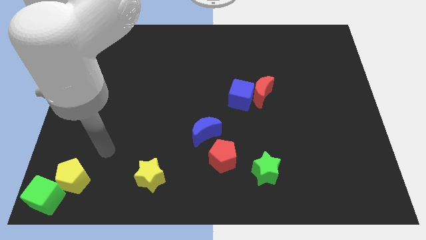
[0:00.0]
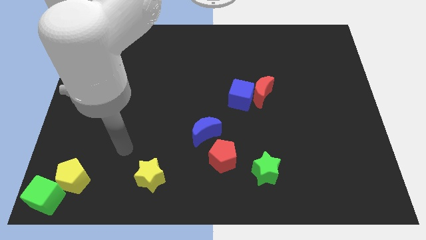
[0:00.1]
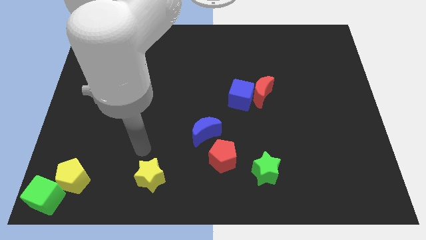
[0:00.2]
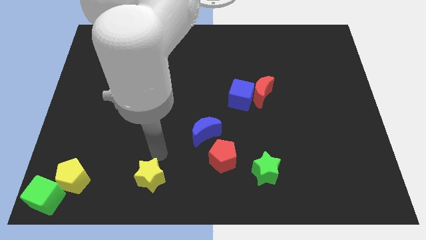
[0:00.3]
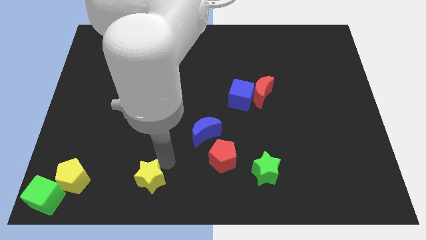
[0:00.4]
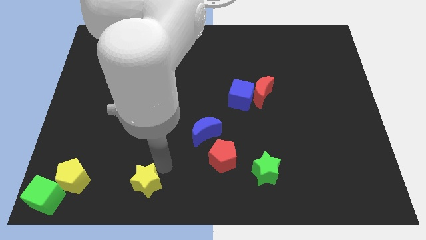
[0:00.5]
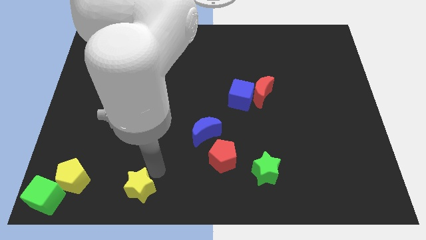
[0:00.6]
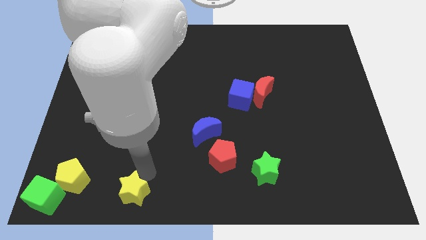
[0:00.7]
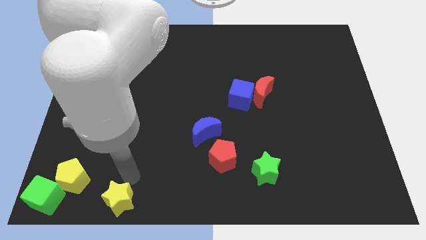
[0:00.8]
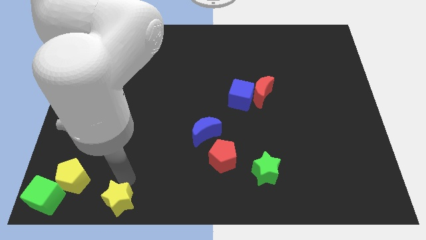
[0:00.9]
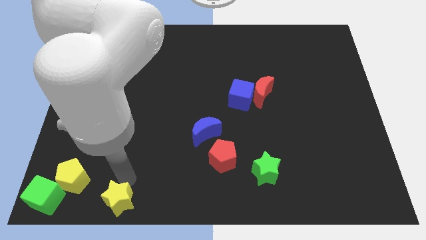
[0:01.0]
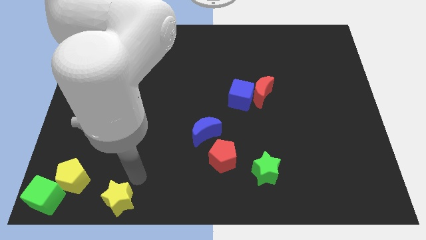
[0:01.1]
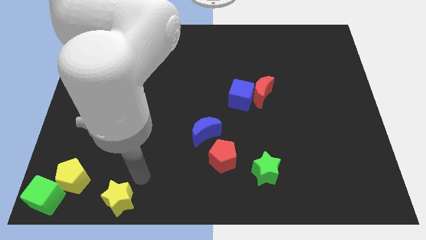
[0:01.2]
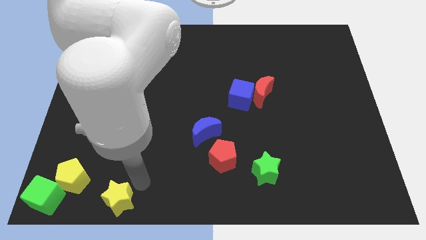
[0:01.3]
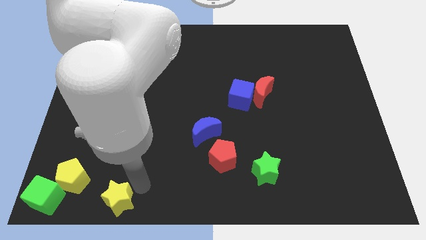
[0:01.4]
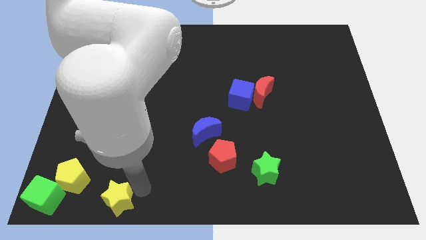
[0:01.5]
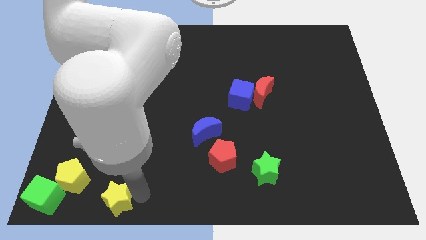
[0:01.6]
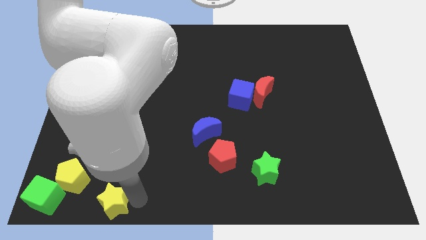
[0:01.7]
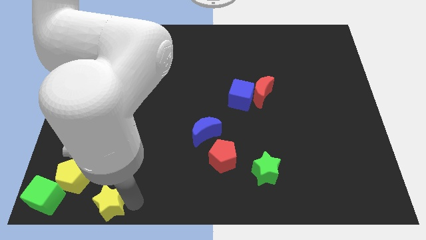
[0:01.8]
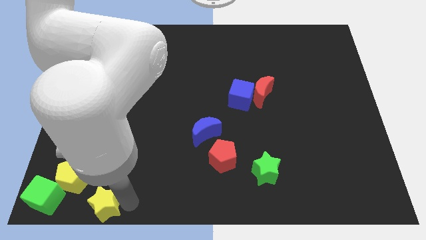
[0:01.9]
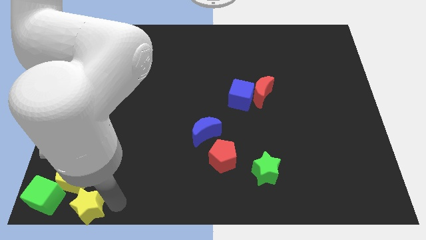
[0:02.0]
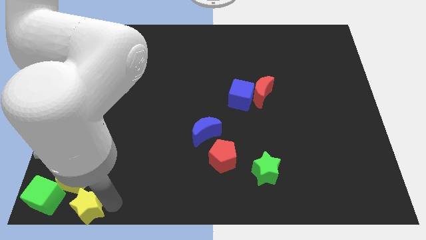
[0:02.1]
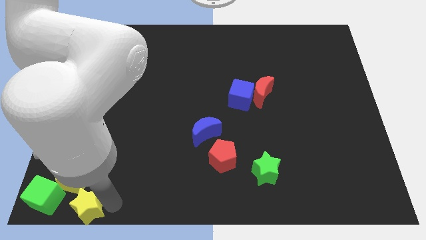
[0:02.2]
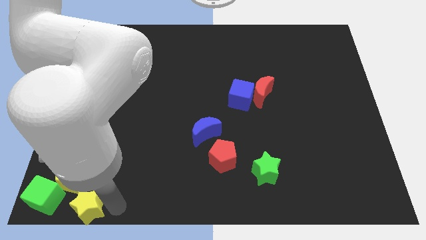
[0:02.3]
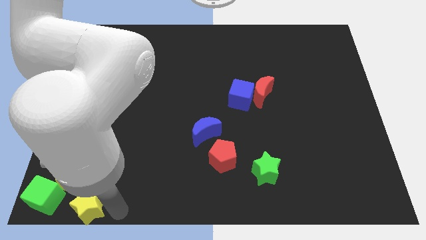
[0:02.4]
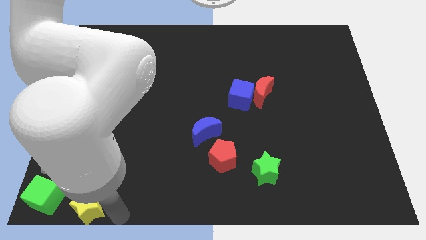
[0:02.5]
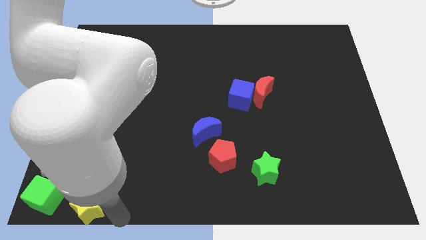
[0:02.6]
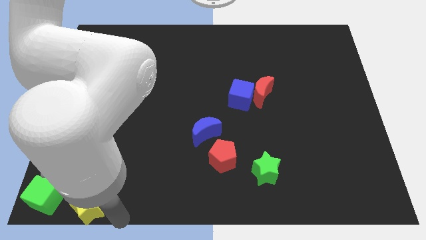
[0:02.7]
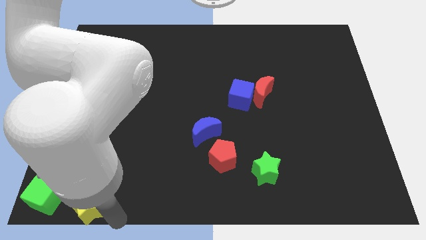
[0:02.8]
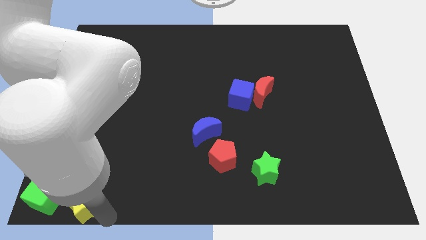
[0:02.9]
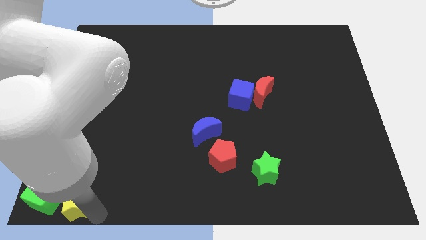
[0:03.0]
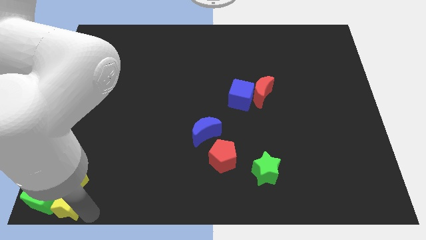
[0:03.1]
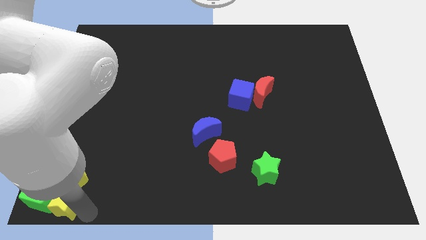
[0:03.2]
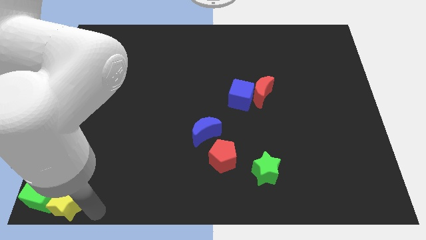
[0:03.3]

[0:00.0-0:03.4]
move the yellow star to the left side of the green cube

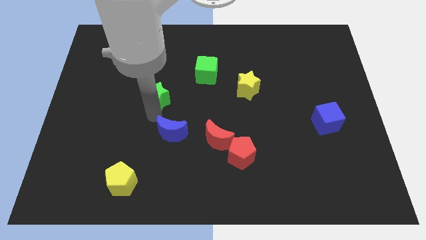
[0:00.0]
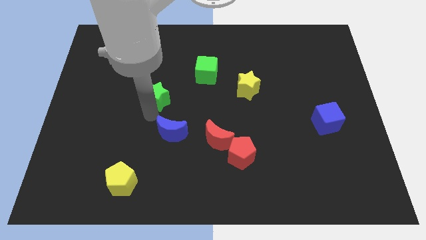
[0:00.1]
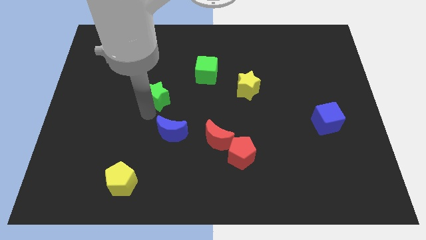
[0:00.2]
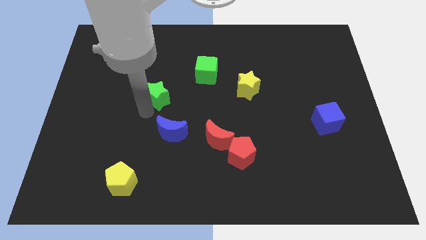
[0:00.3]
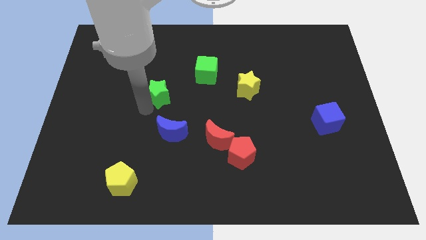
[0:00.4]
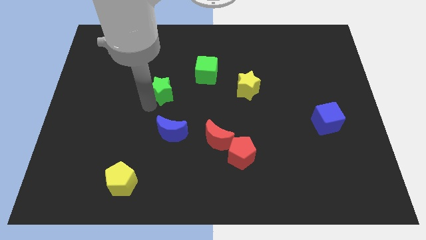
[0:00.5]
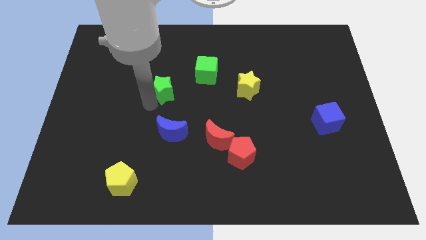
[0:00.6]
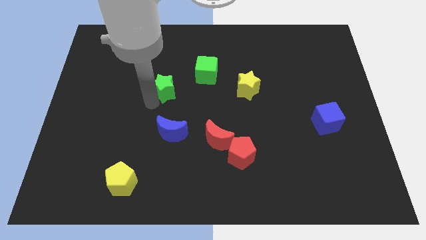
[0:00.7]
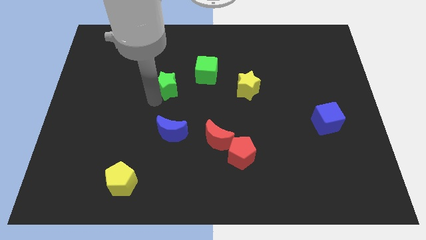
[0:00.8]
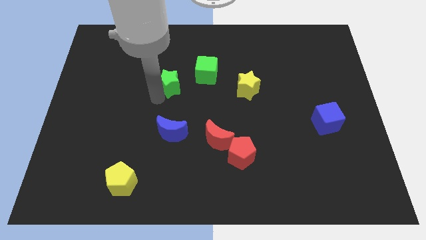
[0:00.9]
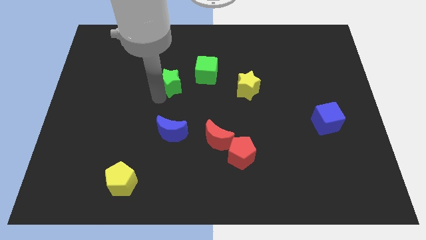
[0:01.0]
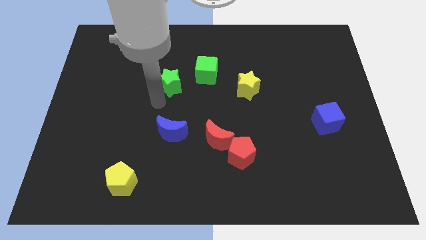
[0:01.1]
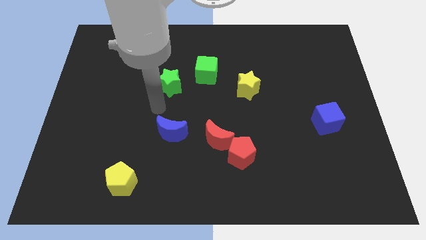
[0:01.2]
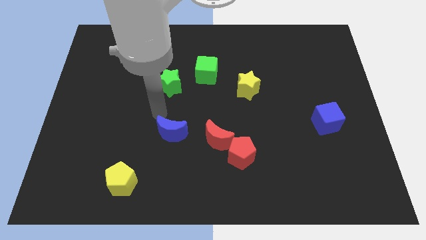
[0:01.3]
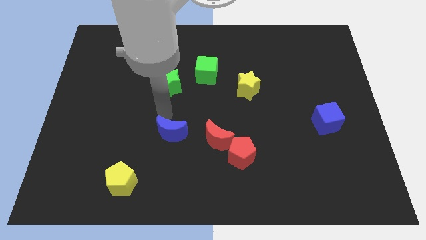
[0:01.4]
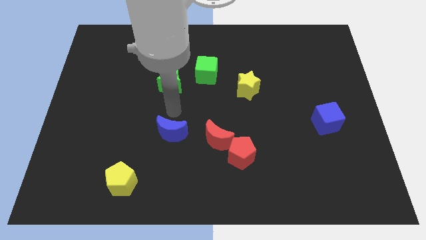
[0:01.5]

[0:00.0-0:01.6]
move the green star diagonally left of the green cube

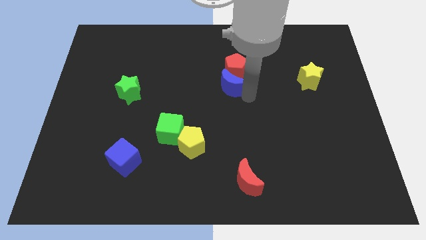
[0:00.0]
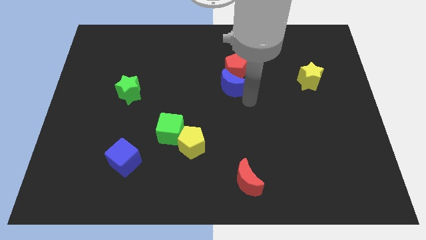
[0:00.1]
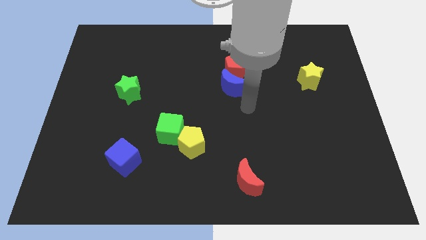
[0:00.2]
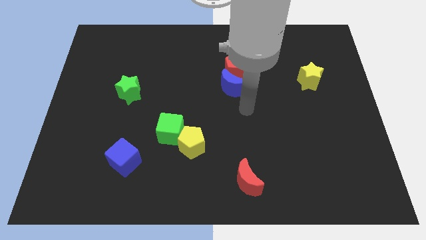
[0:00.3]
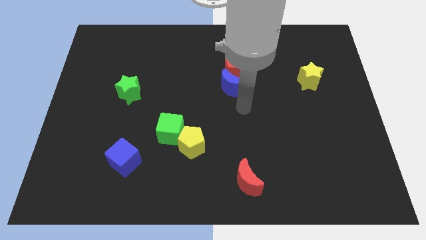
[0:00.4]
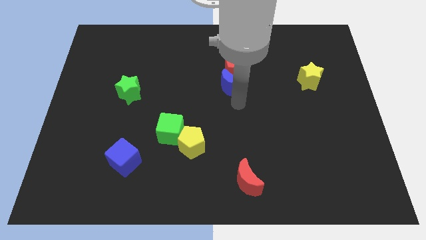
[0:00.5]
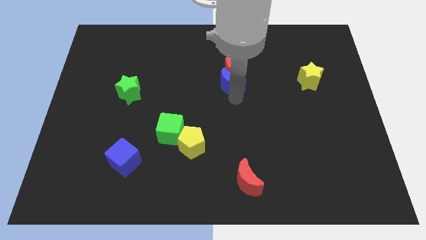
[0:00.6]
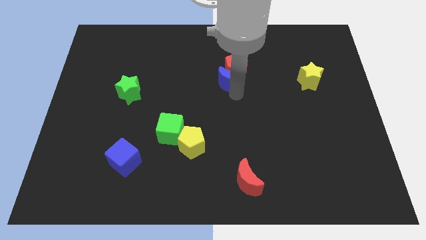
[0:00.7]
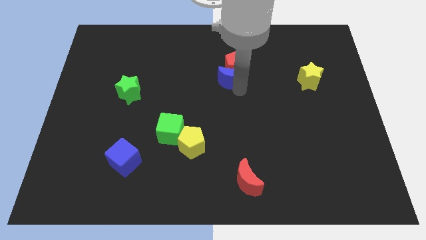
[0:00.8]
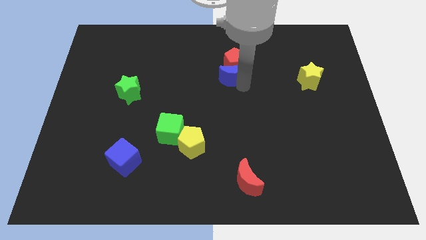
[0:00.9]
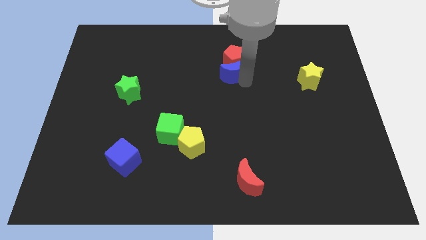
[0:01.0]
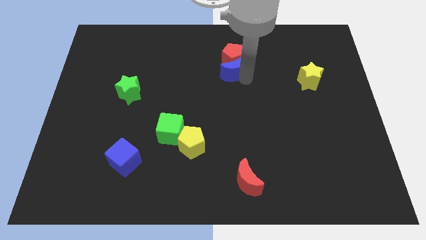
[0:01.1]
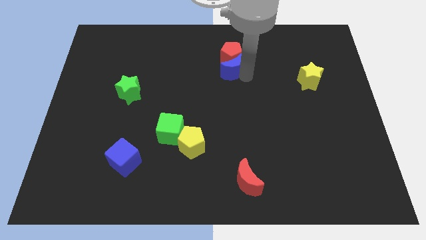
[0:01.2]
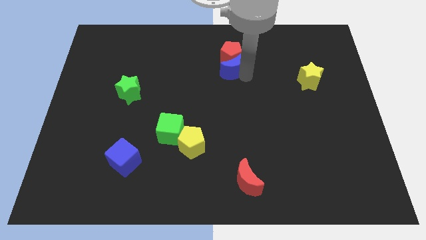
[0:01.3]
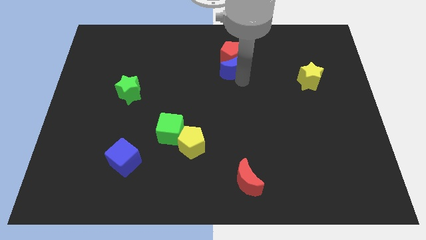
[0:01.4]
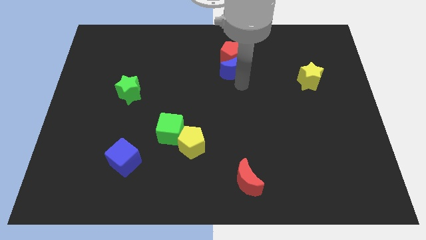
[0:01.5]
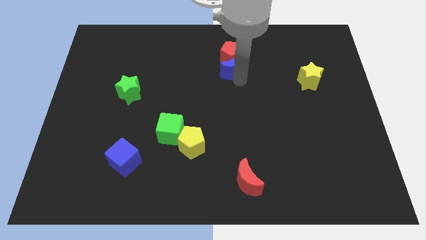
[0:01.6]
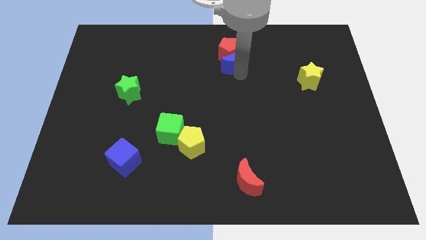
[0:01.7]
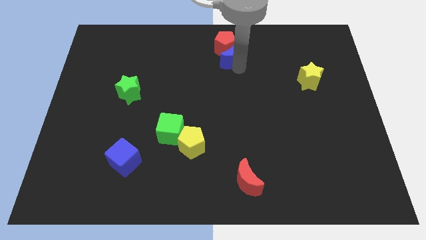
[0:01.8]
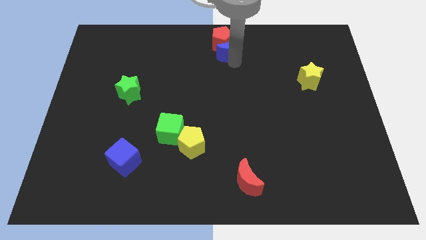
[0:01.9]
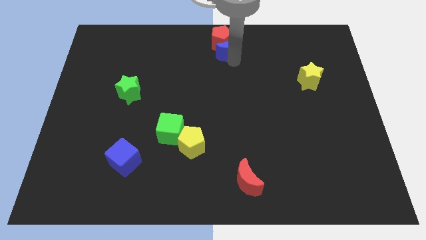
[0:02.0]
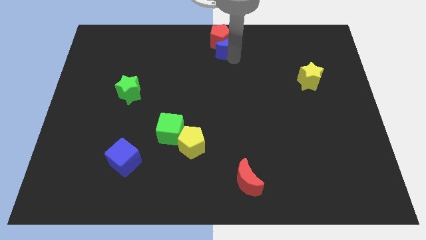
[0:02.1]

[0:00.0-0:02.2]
place the red pentagon and blue moon to center top of the board

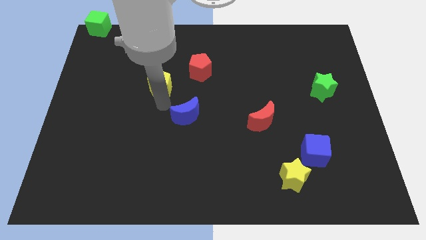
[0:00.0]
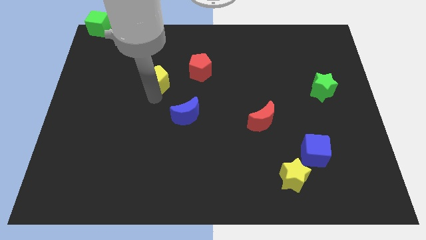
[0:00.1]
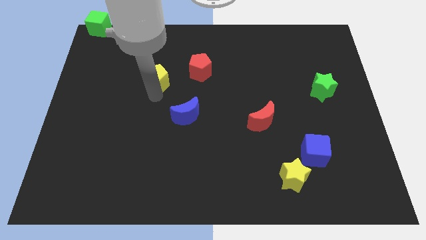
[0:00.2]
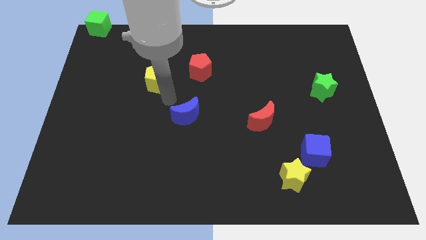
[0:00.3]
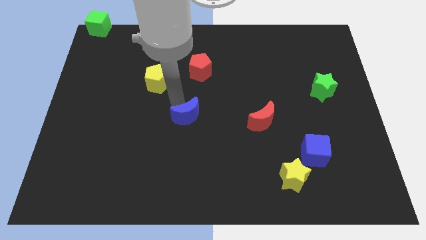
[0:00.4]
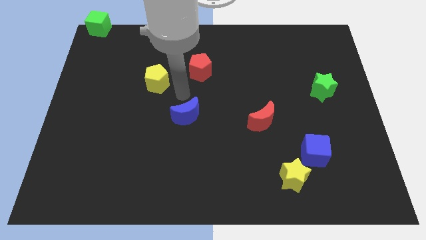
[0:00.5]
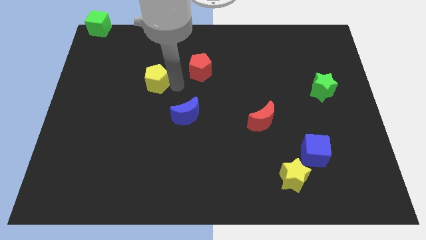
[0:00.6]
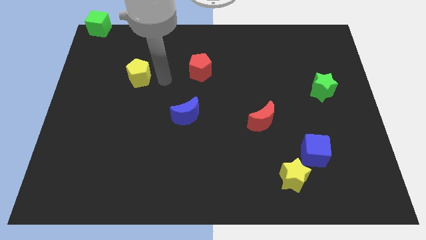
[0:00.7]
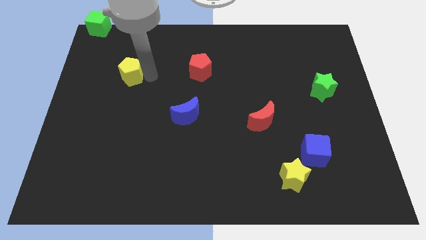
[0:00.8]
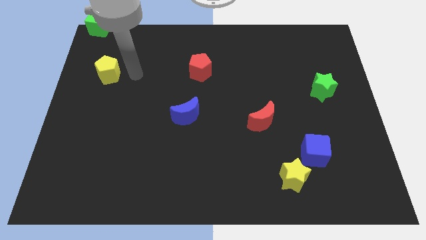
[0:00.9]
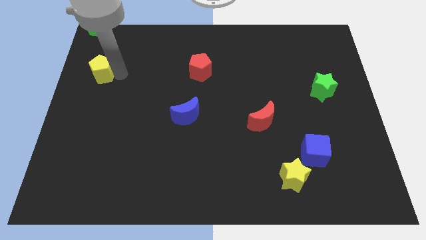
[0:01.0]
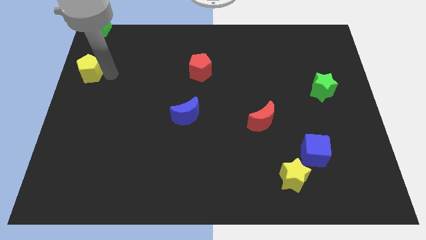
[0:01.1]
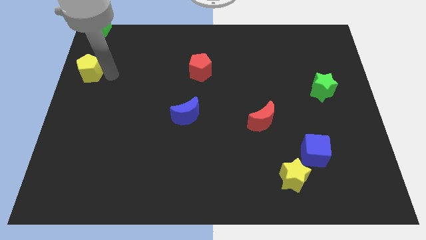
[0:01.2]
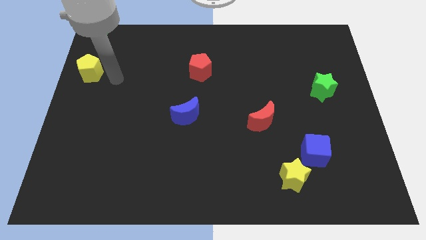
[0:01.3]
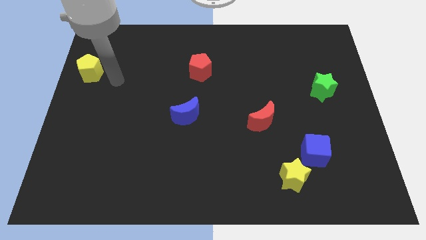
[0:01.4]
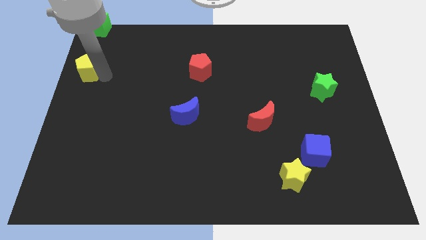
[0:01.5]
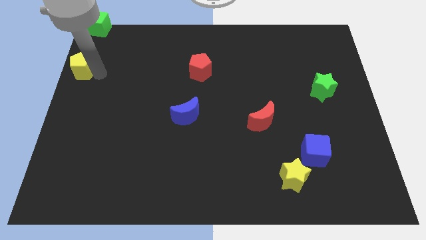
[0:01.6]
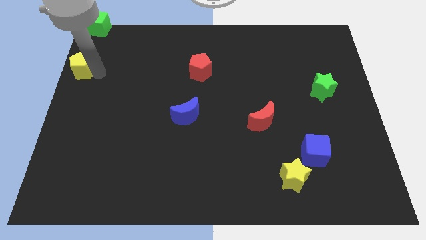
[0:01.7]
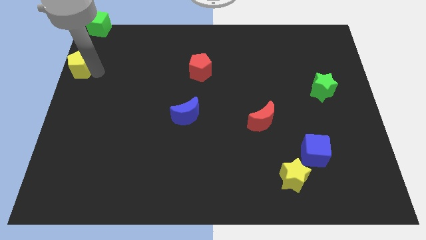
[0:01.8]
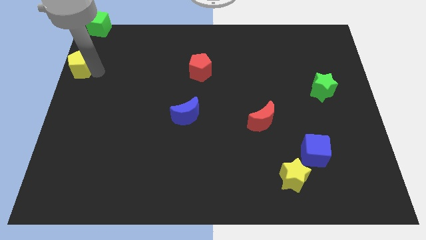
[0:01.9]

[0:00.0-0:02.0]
place the yellow pentagon below the green cube
